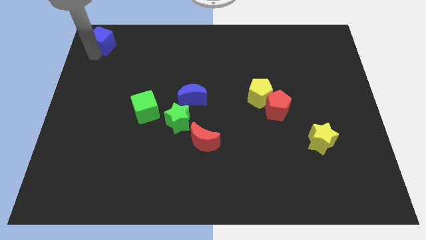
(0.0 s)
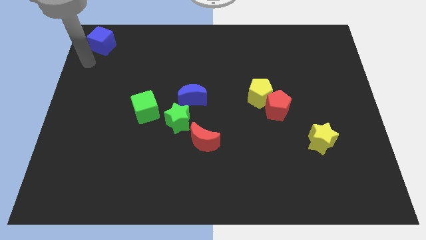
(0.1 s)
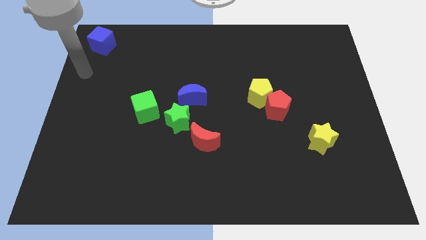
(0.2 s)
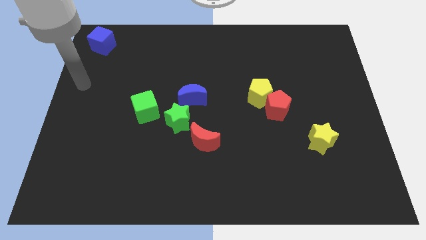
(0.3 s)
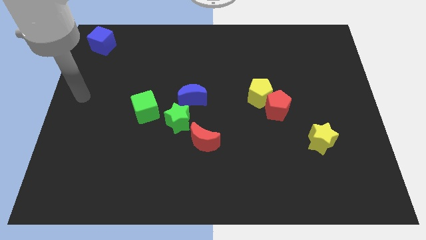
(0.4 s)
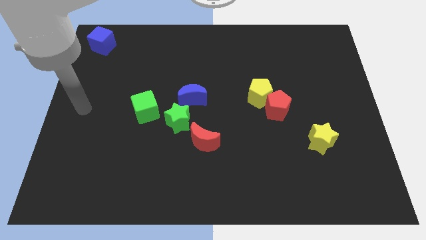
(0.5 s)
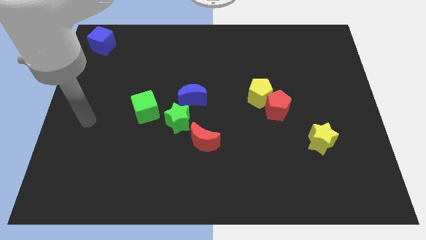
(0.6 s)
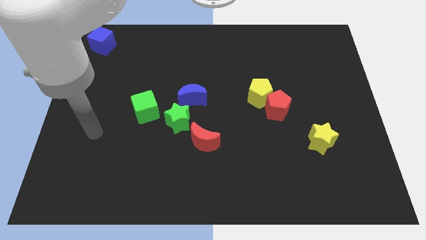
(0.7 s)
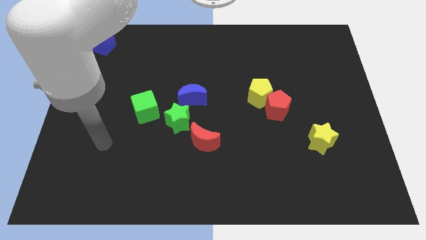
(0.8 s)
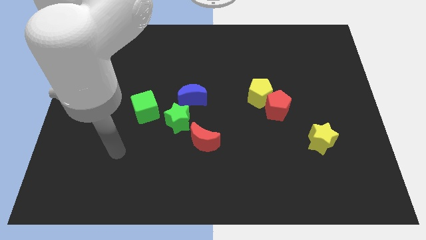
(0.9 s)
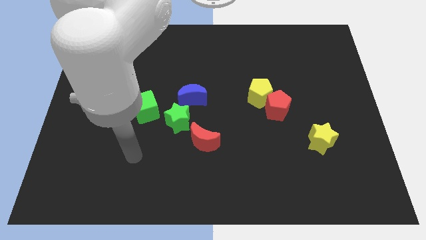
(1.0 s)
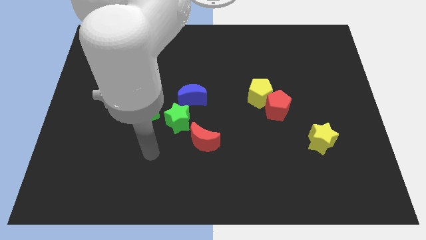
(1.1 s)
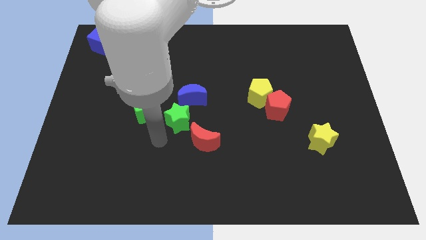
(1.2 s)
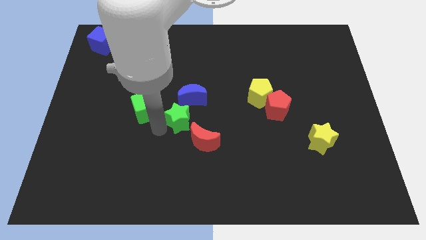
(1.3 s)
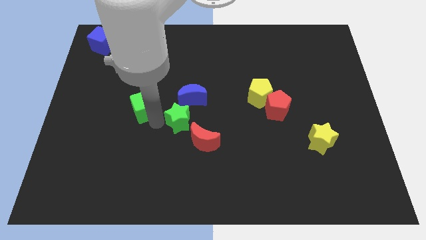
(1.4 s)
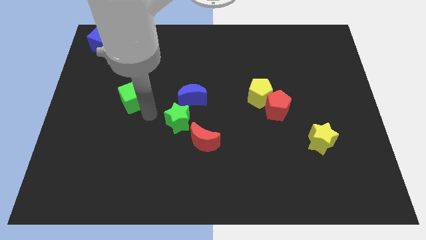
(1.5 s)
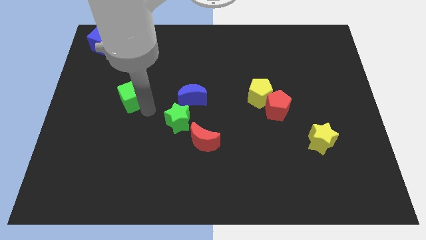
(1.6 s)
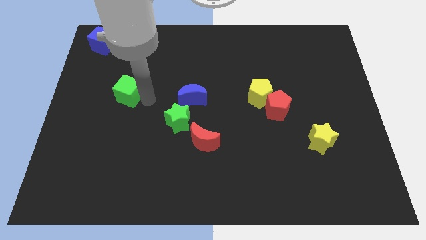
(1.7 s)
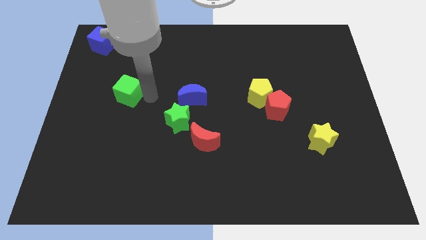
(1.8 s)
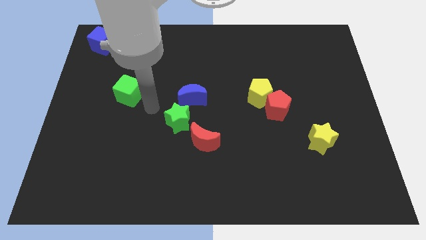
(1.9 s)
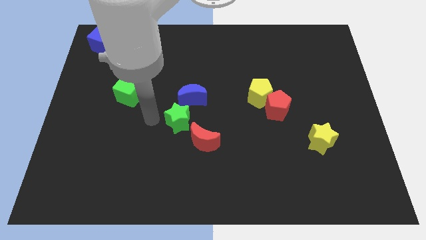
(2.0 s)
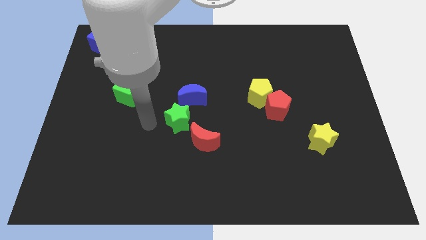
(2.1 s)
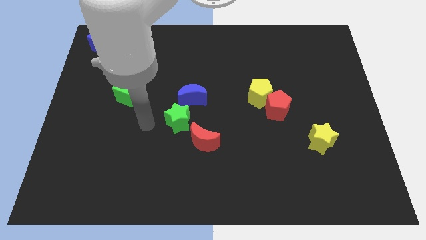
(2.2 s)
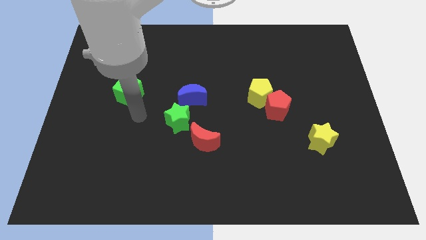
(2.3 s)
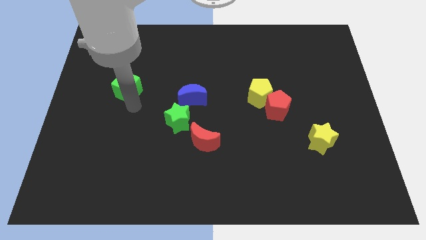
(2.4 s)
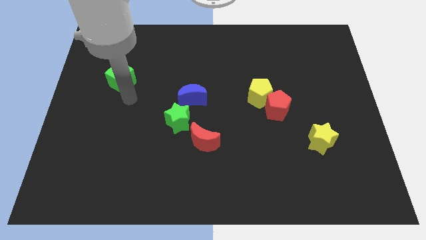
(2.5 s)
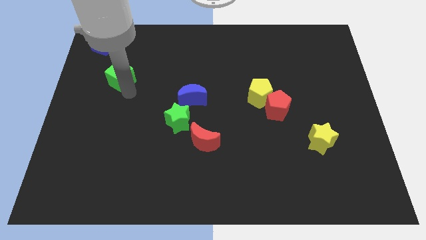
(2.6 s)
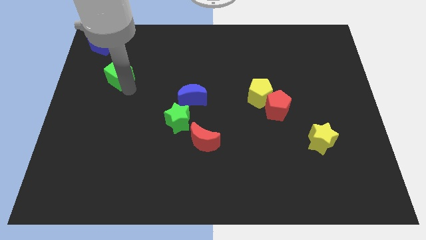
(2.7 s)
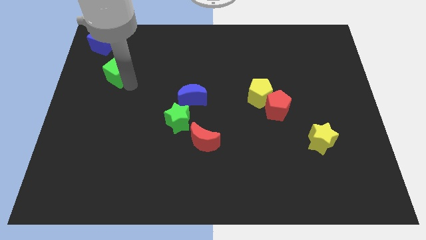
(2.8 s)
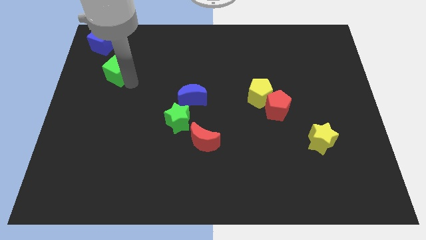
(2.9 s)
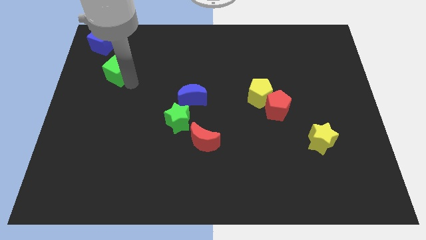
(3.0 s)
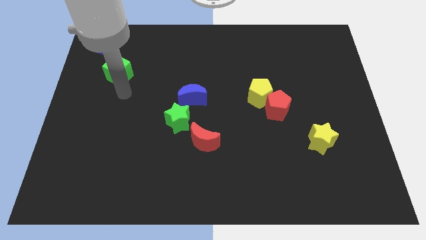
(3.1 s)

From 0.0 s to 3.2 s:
move green cube near blue cube

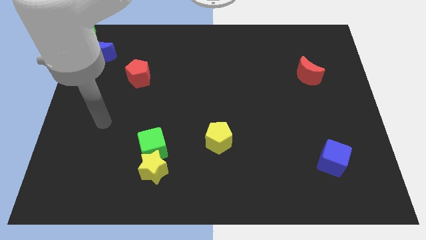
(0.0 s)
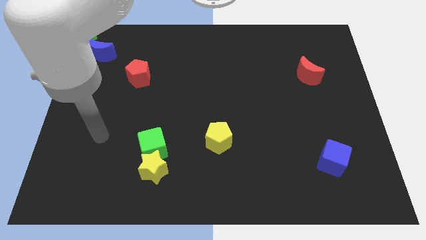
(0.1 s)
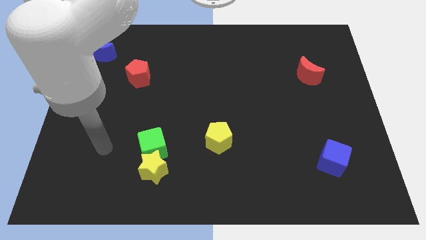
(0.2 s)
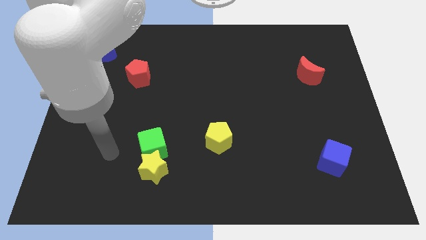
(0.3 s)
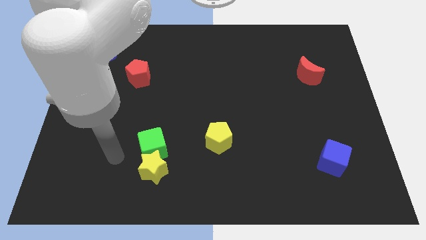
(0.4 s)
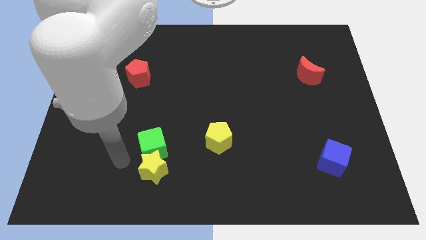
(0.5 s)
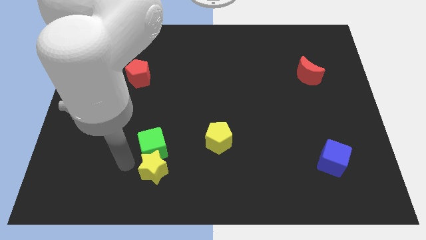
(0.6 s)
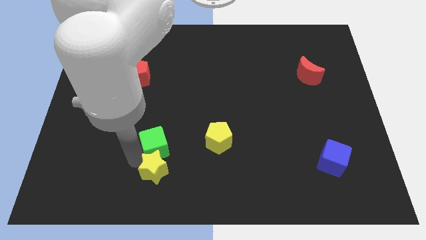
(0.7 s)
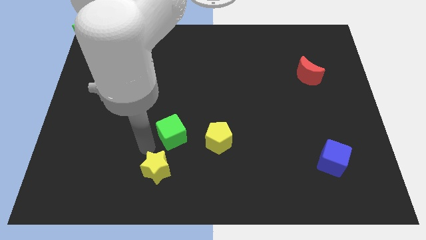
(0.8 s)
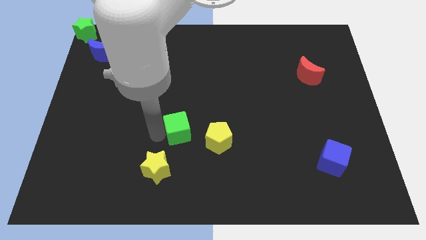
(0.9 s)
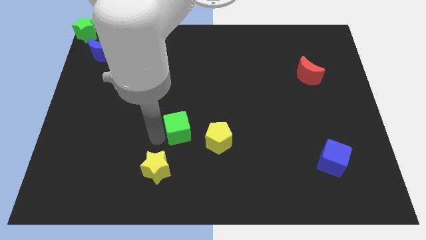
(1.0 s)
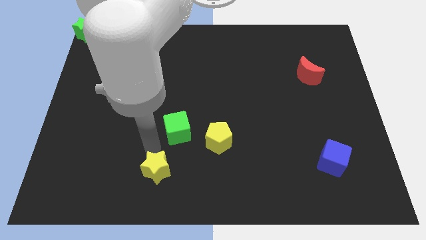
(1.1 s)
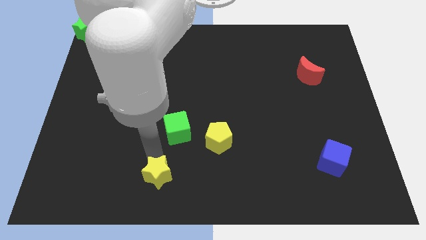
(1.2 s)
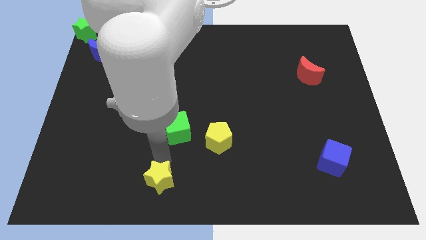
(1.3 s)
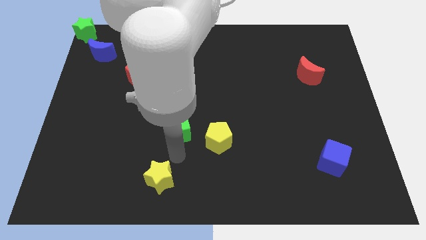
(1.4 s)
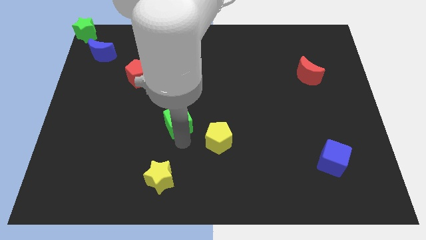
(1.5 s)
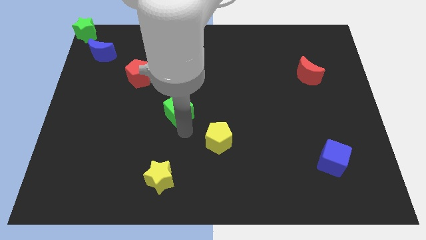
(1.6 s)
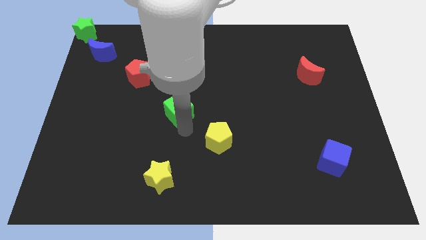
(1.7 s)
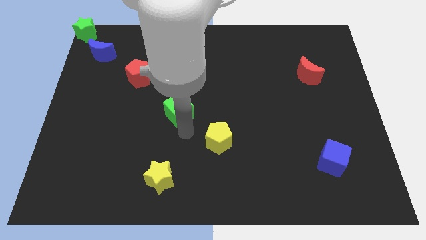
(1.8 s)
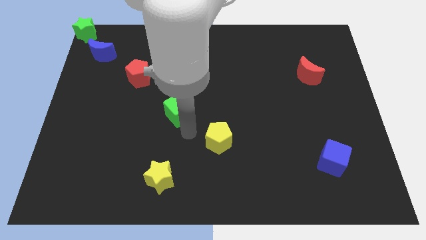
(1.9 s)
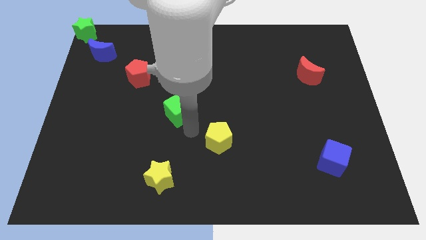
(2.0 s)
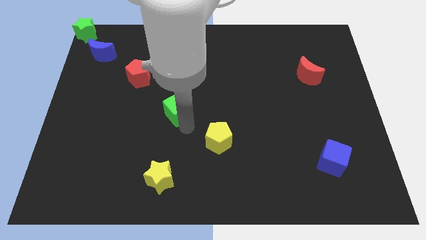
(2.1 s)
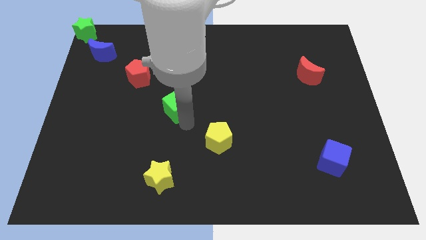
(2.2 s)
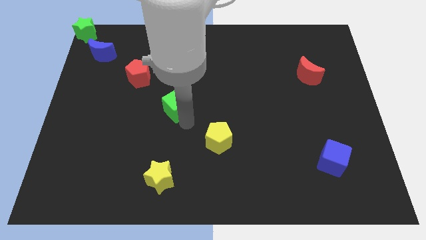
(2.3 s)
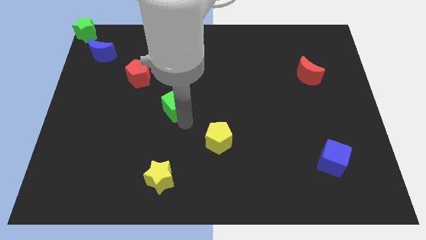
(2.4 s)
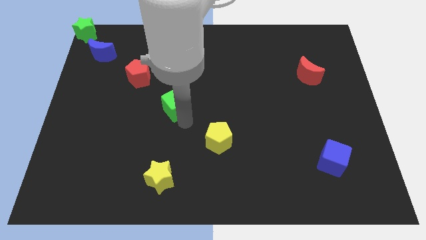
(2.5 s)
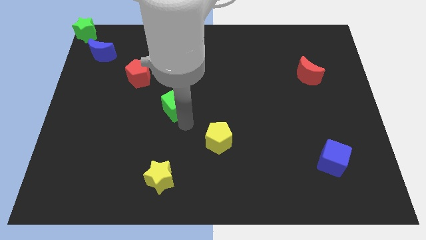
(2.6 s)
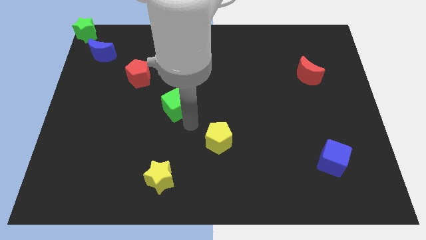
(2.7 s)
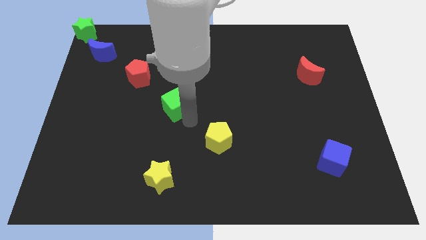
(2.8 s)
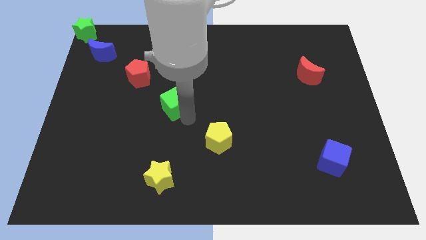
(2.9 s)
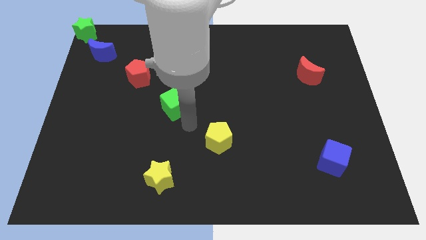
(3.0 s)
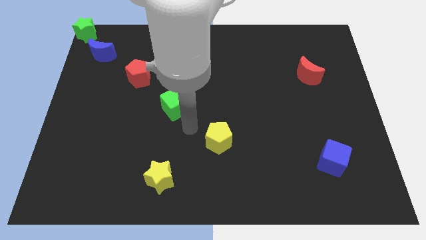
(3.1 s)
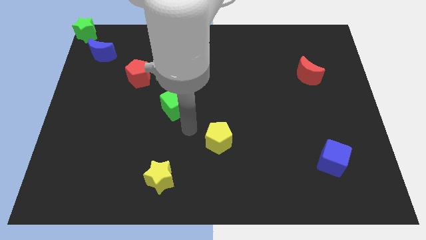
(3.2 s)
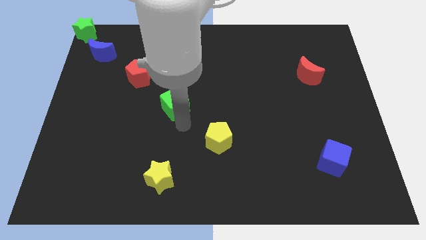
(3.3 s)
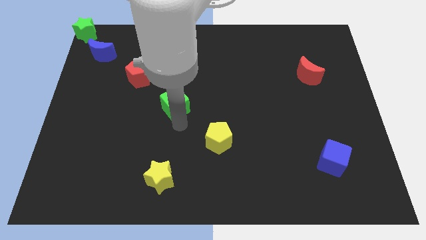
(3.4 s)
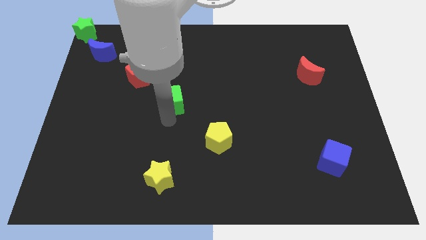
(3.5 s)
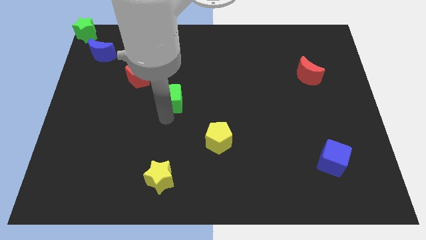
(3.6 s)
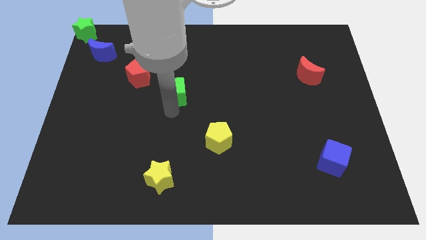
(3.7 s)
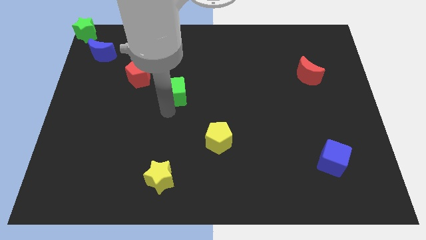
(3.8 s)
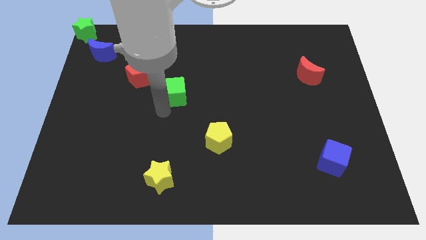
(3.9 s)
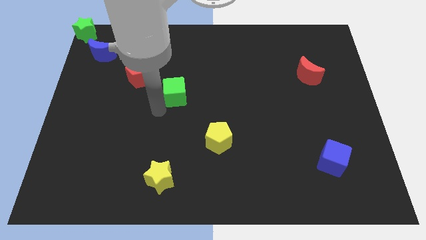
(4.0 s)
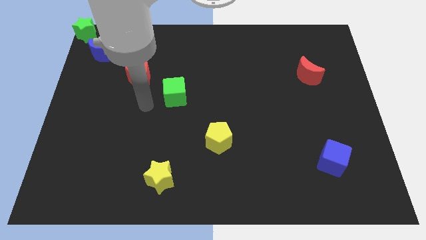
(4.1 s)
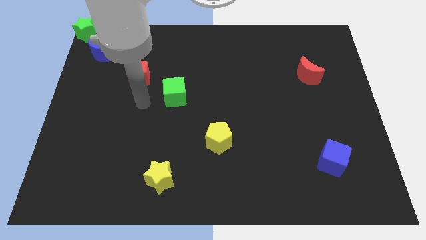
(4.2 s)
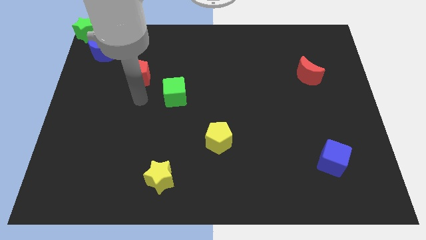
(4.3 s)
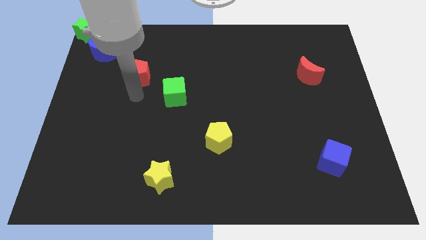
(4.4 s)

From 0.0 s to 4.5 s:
separate the yellow star and the green cube

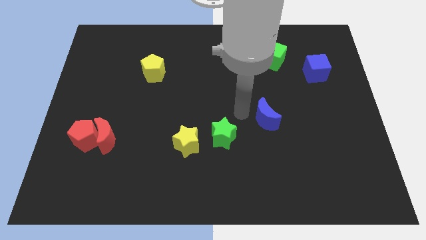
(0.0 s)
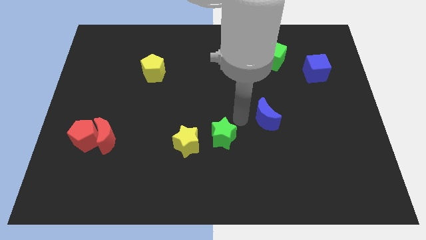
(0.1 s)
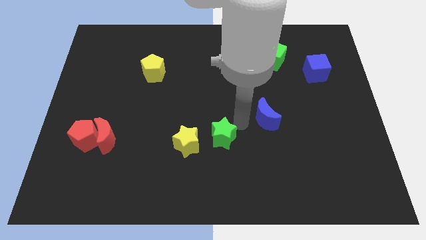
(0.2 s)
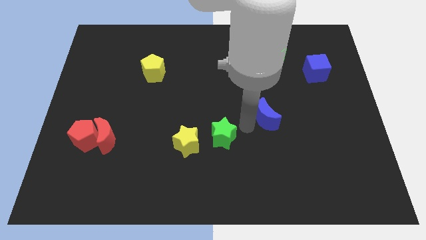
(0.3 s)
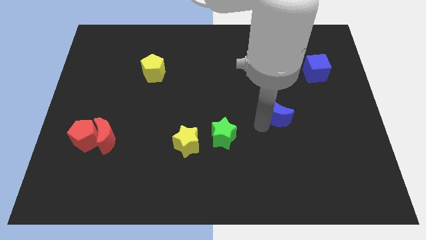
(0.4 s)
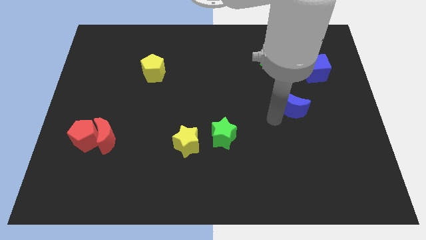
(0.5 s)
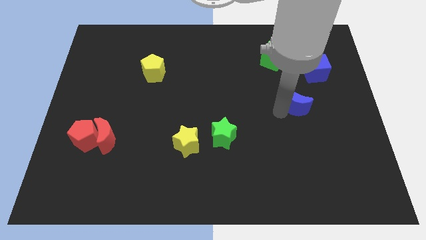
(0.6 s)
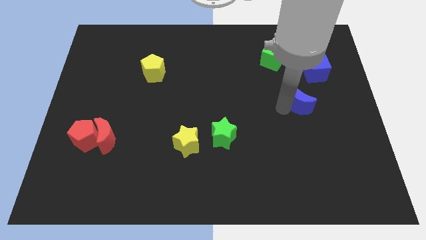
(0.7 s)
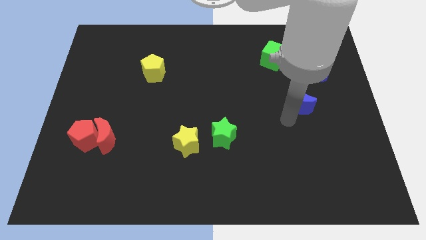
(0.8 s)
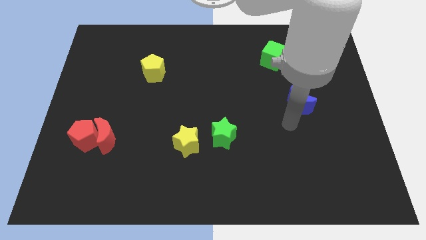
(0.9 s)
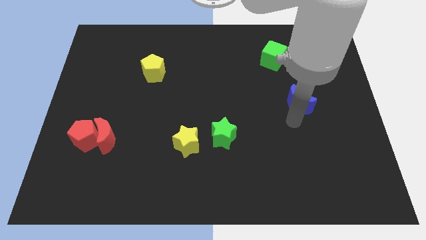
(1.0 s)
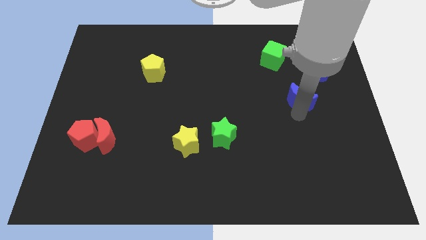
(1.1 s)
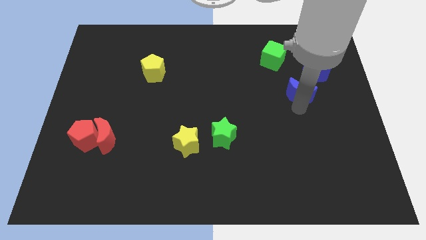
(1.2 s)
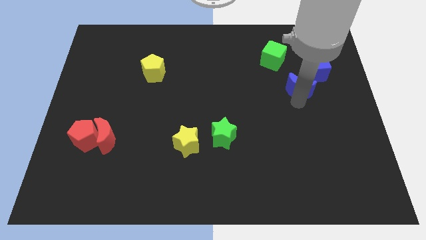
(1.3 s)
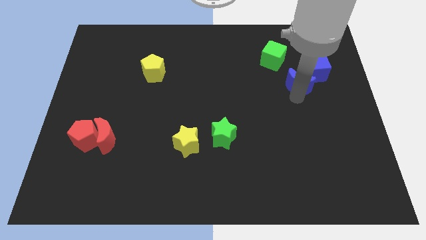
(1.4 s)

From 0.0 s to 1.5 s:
move blue crescent into blue cube
